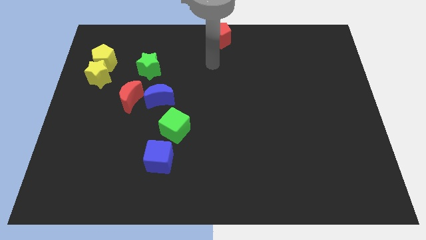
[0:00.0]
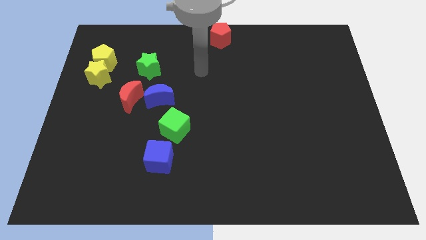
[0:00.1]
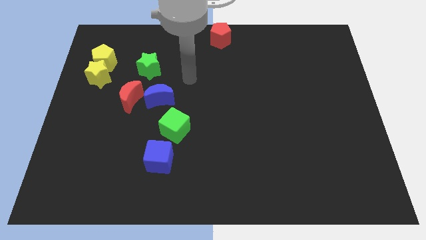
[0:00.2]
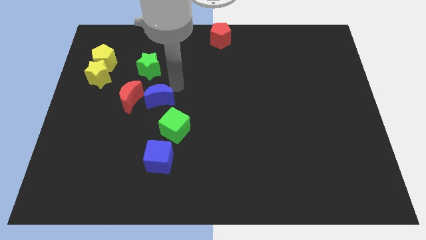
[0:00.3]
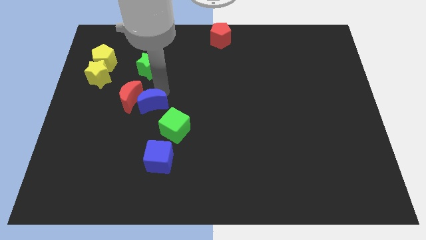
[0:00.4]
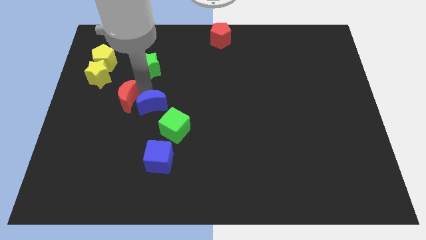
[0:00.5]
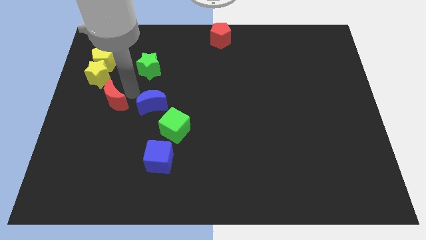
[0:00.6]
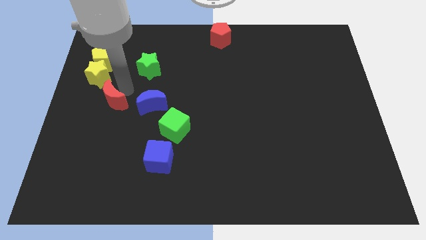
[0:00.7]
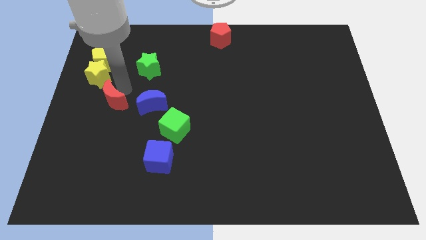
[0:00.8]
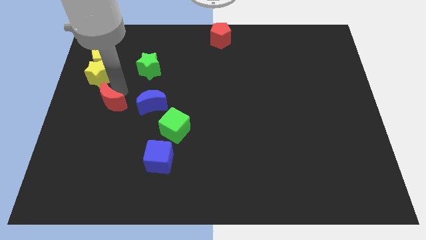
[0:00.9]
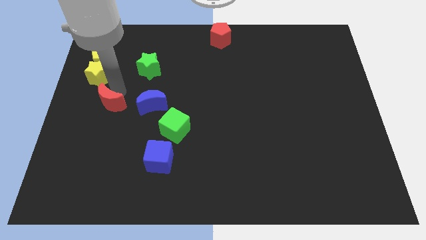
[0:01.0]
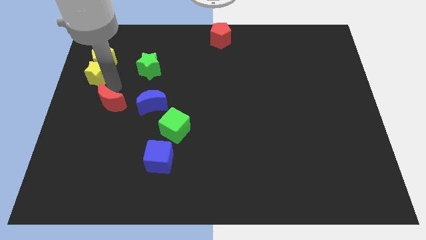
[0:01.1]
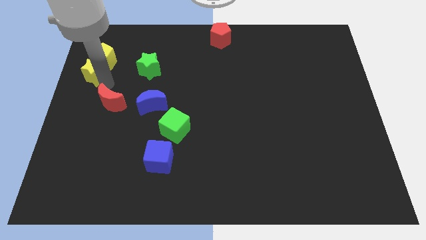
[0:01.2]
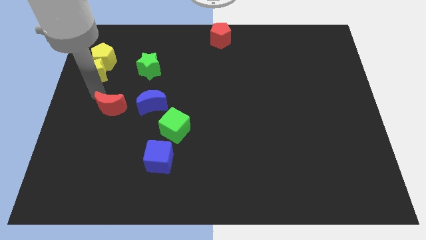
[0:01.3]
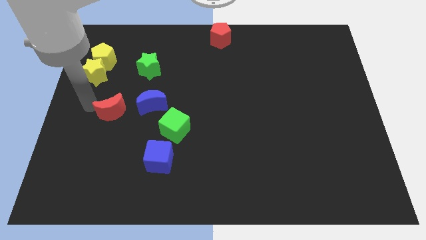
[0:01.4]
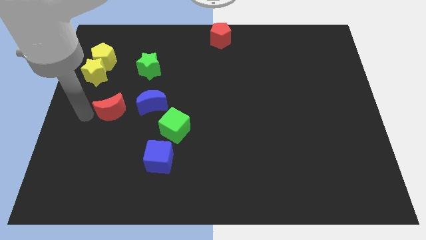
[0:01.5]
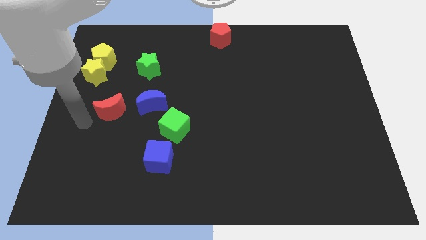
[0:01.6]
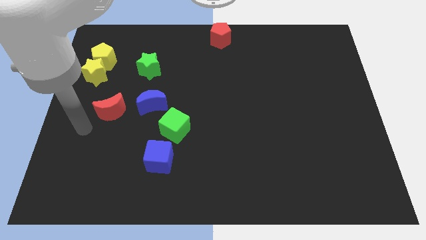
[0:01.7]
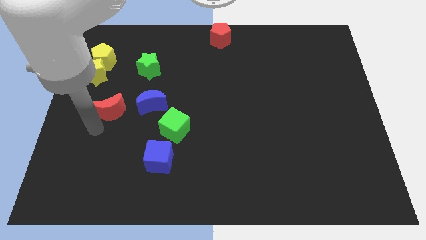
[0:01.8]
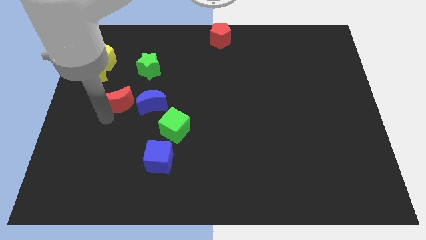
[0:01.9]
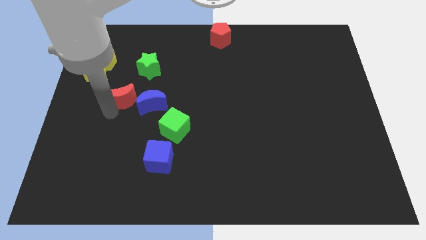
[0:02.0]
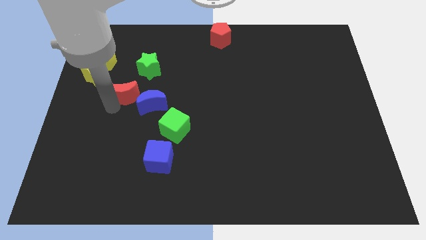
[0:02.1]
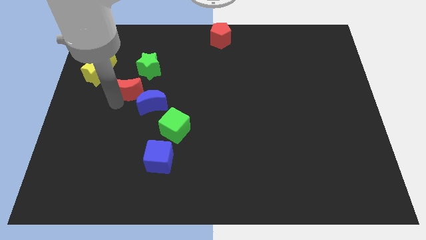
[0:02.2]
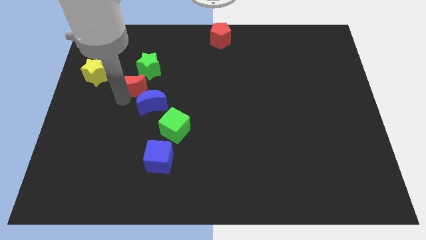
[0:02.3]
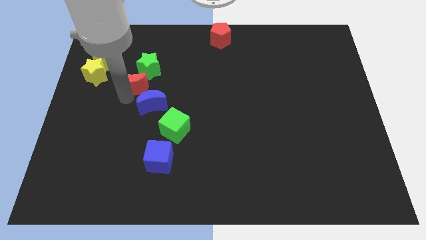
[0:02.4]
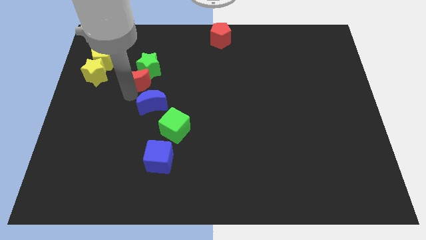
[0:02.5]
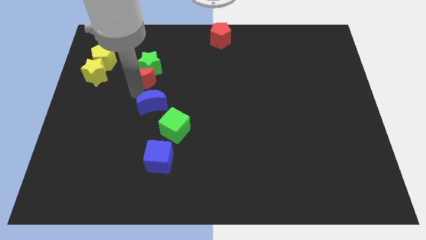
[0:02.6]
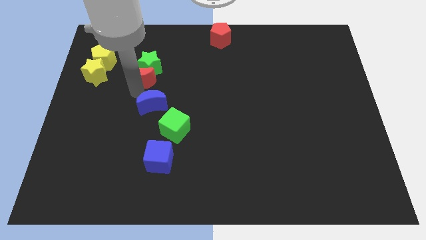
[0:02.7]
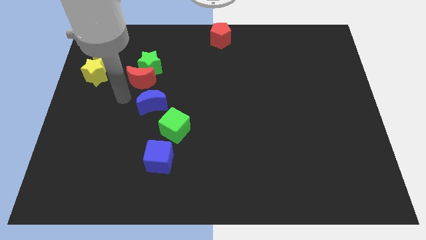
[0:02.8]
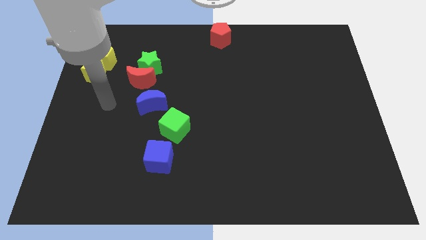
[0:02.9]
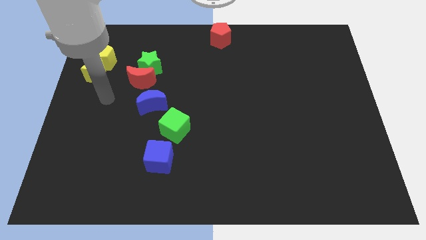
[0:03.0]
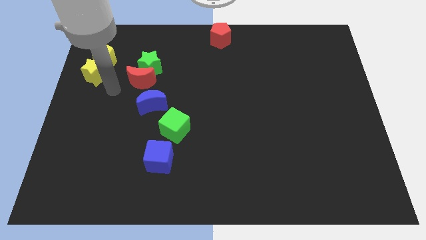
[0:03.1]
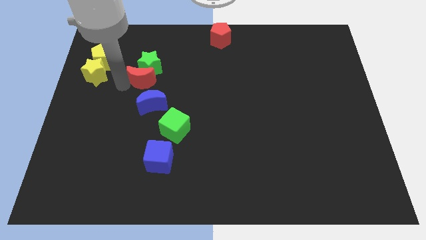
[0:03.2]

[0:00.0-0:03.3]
move the red moon under the green star

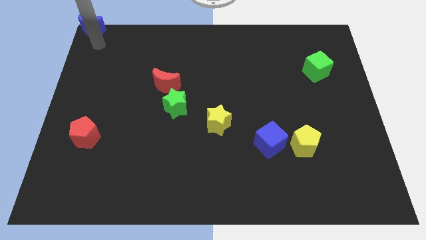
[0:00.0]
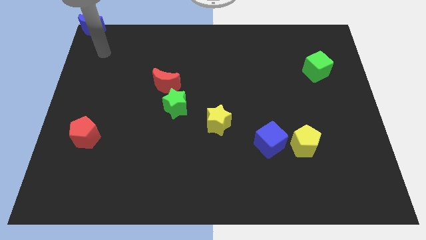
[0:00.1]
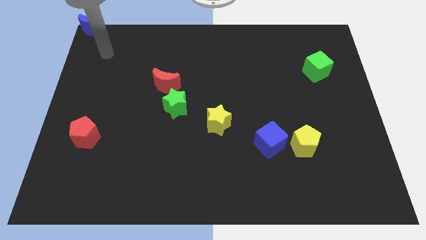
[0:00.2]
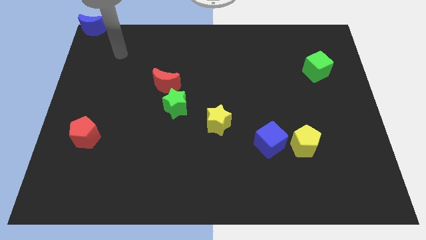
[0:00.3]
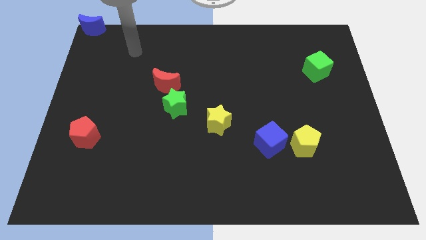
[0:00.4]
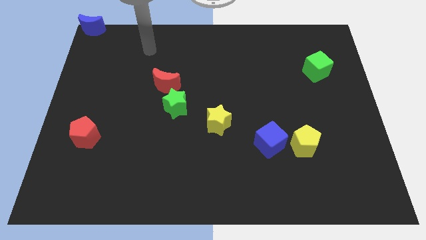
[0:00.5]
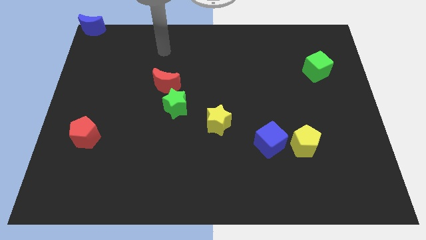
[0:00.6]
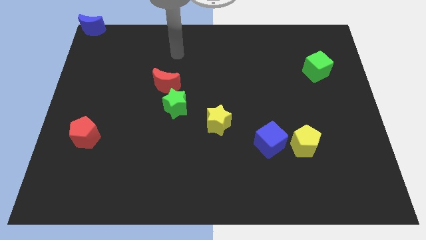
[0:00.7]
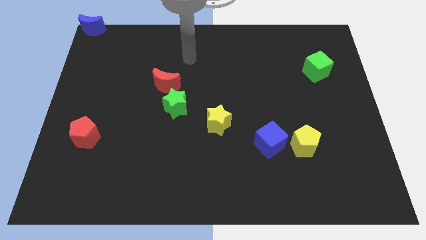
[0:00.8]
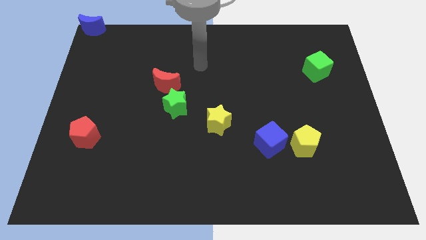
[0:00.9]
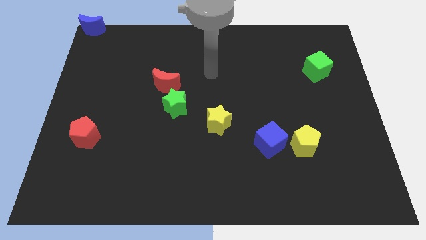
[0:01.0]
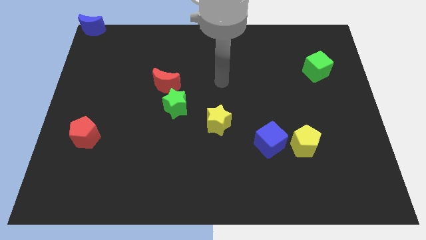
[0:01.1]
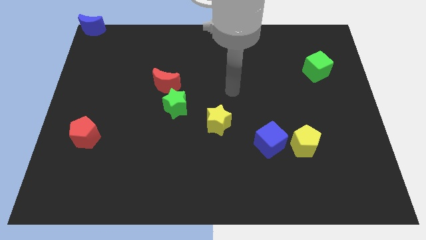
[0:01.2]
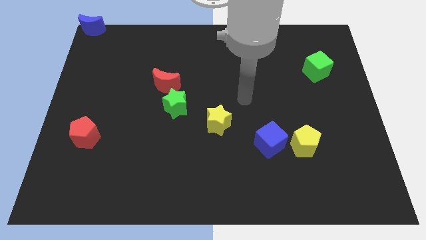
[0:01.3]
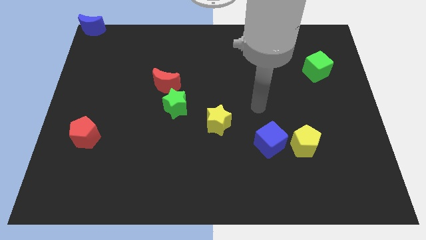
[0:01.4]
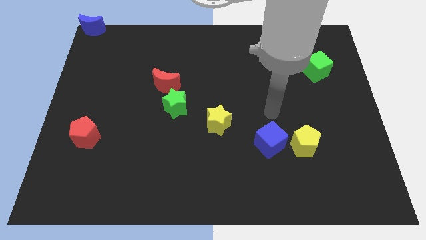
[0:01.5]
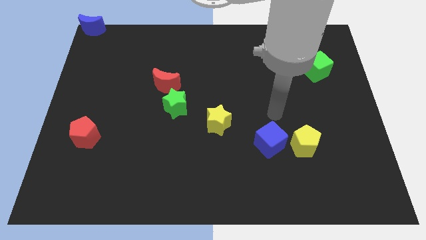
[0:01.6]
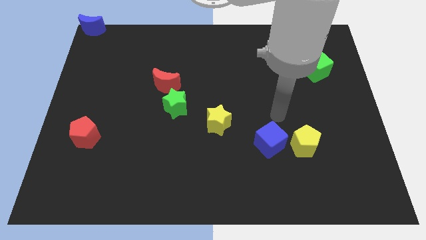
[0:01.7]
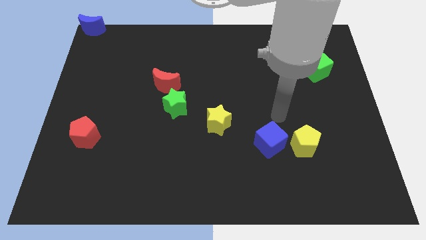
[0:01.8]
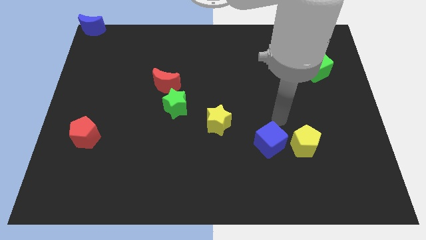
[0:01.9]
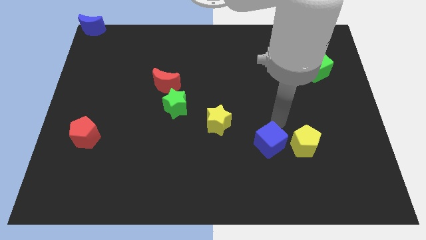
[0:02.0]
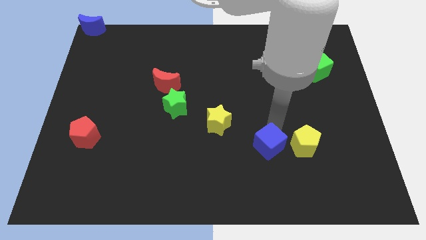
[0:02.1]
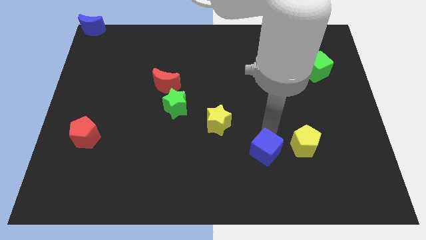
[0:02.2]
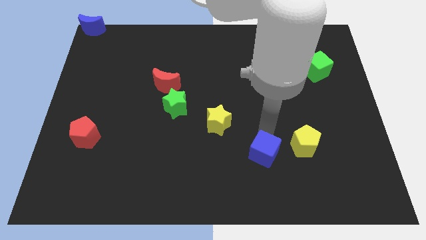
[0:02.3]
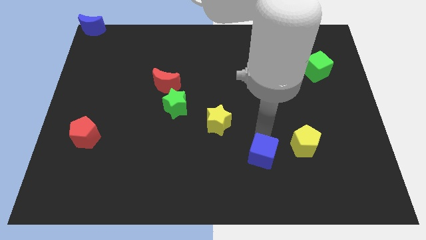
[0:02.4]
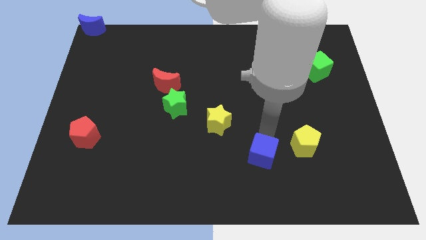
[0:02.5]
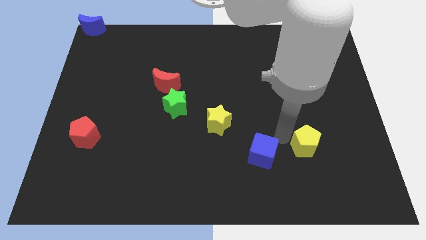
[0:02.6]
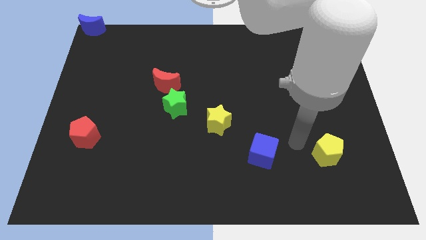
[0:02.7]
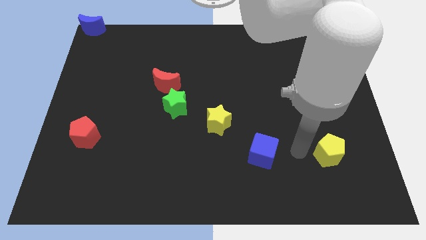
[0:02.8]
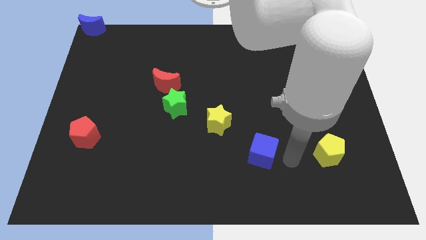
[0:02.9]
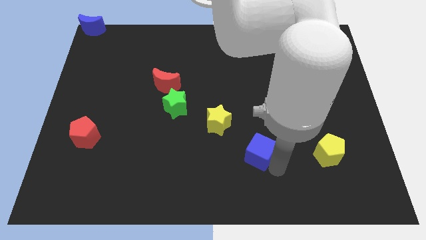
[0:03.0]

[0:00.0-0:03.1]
separate the blue cube and yellow pentagon

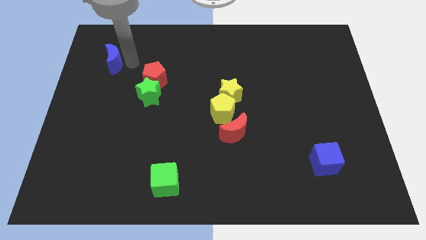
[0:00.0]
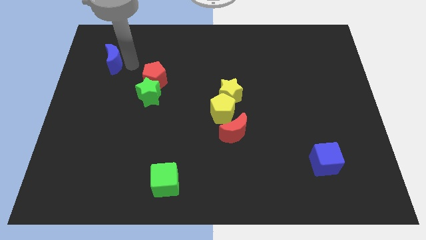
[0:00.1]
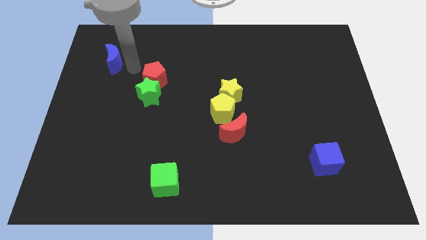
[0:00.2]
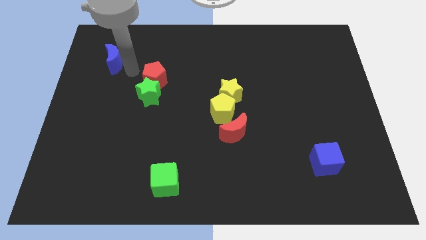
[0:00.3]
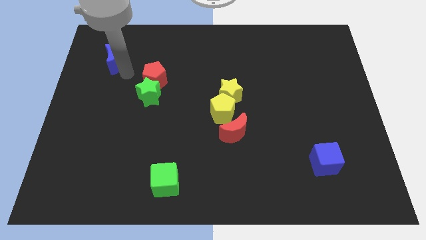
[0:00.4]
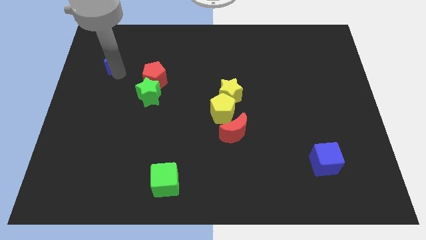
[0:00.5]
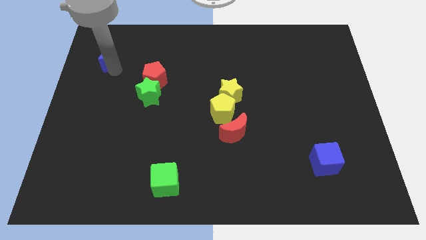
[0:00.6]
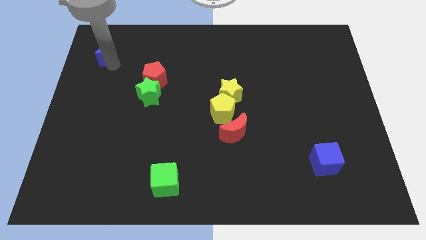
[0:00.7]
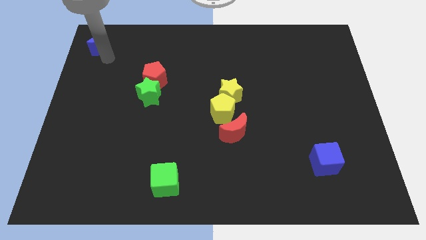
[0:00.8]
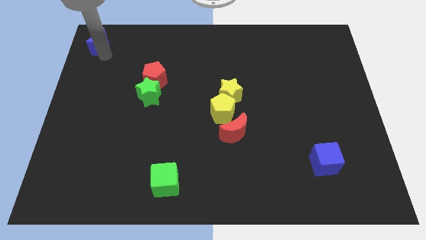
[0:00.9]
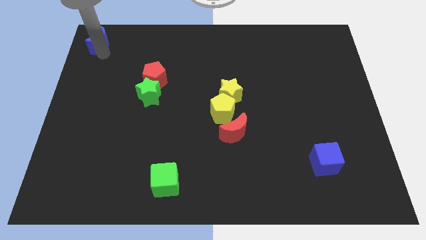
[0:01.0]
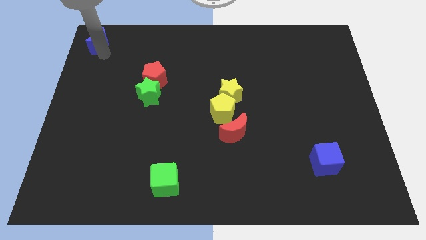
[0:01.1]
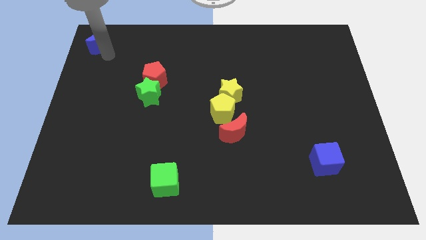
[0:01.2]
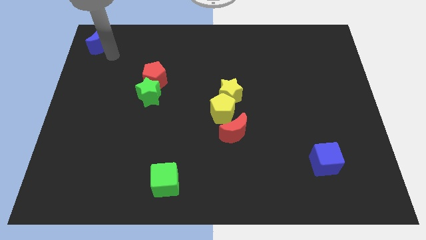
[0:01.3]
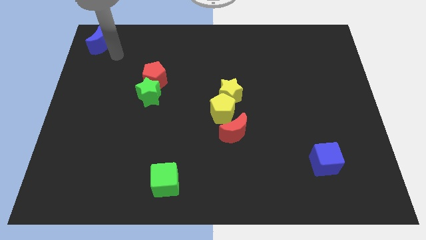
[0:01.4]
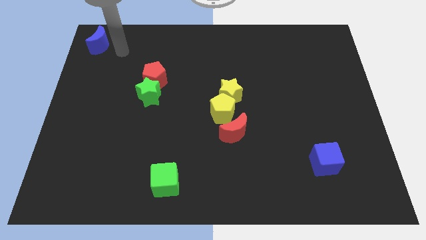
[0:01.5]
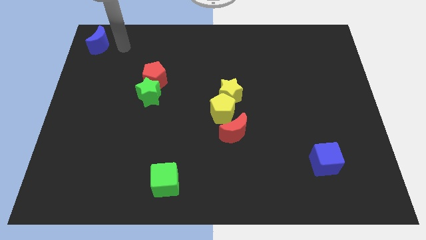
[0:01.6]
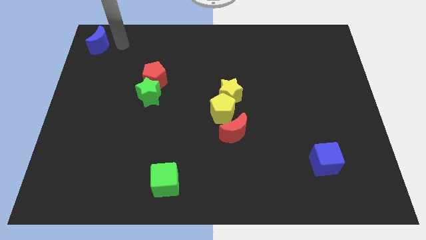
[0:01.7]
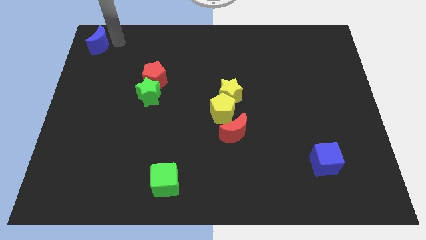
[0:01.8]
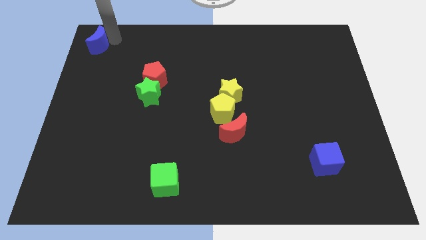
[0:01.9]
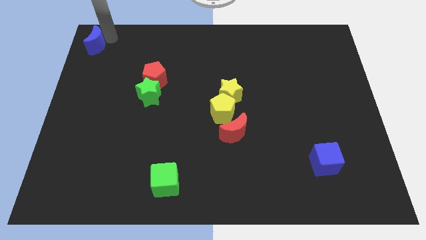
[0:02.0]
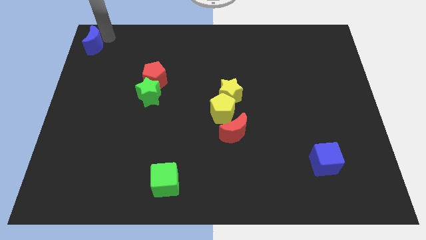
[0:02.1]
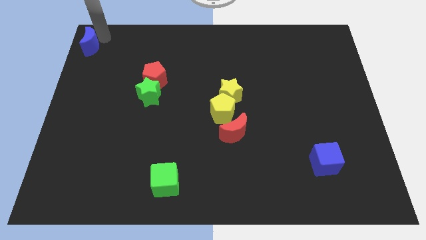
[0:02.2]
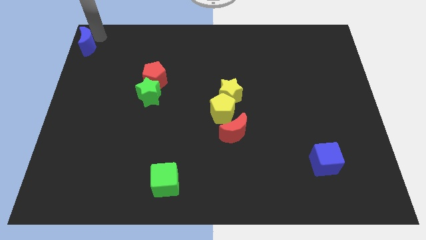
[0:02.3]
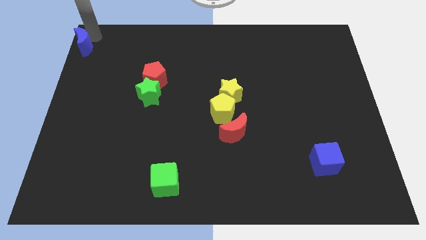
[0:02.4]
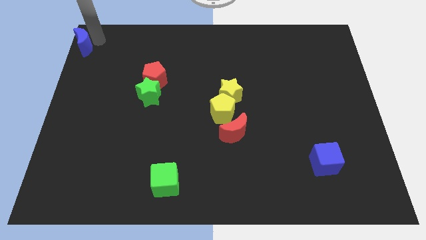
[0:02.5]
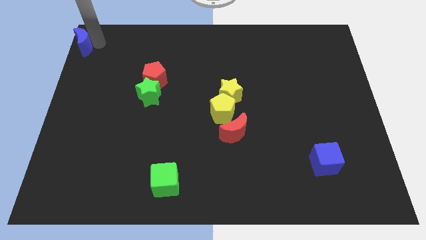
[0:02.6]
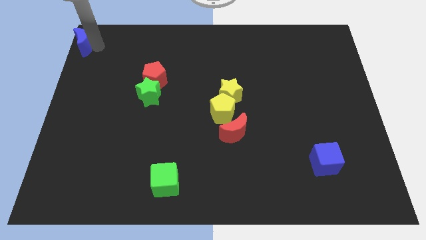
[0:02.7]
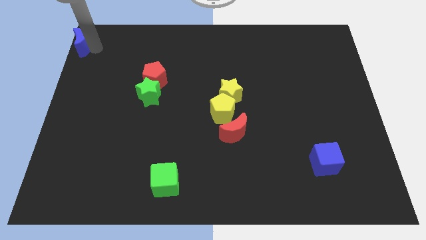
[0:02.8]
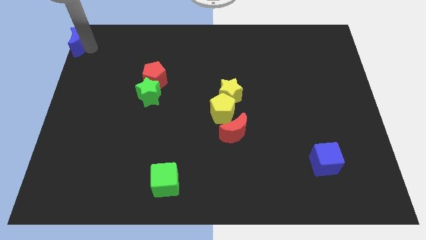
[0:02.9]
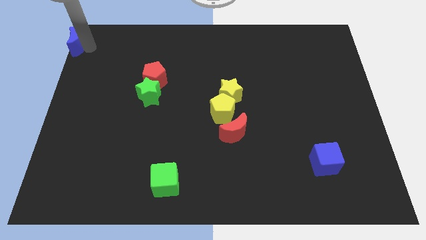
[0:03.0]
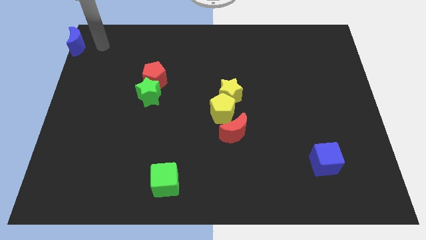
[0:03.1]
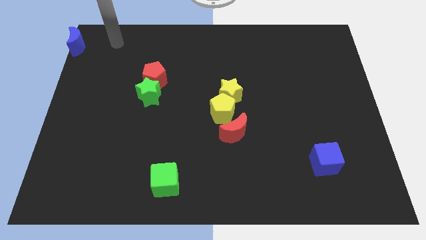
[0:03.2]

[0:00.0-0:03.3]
place the blue moon at the top left side of the board
